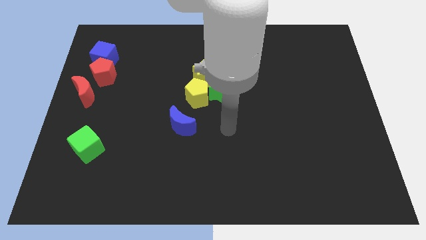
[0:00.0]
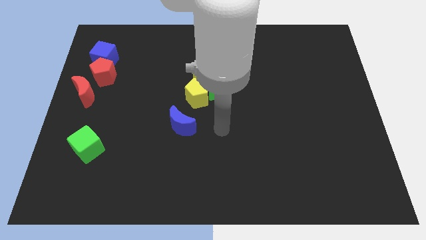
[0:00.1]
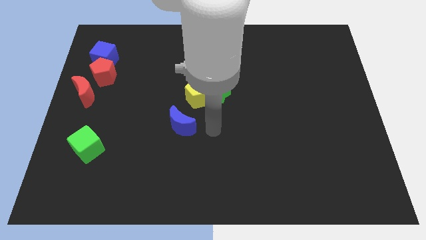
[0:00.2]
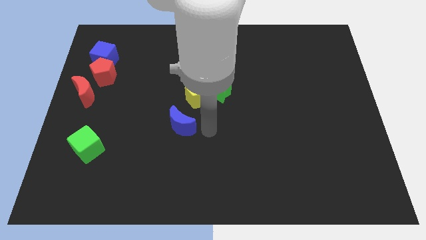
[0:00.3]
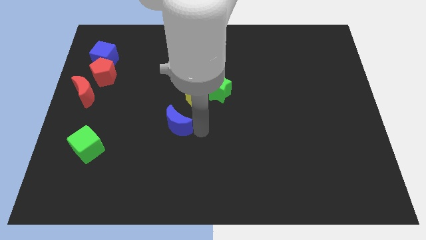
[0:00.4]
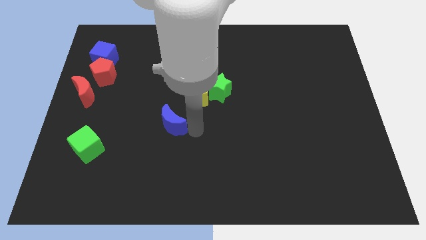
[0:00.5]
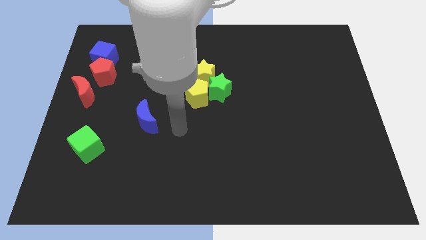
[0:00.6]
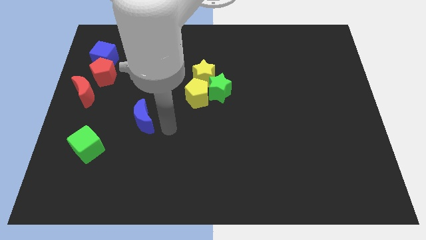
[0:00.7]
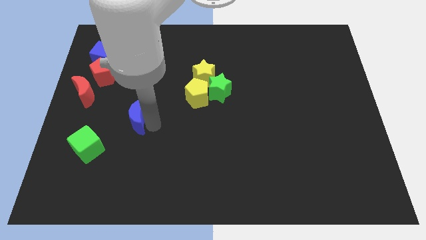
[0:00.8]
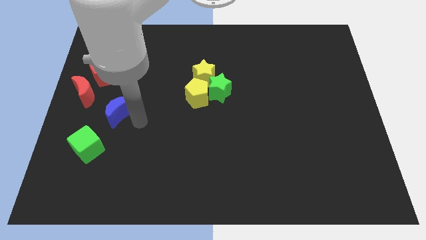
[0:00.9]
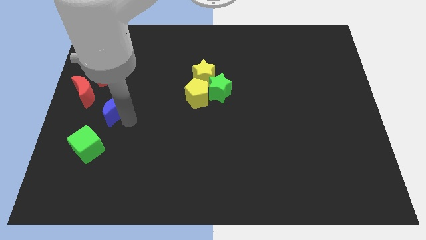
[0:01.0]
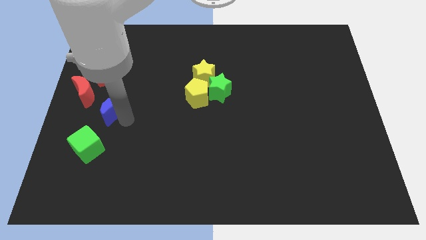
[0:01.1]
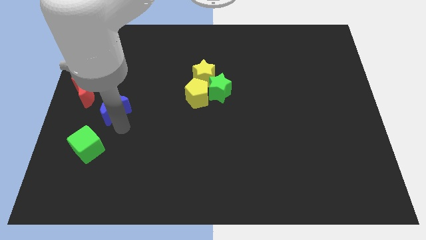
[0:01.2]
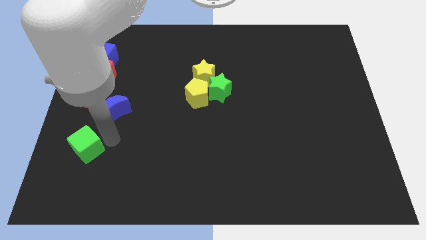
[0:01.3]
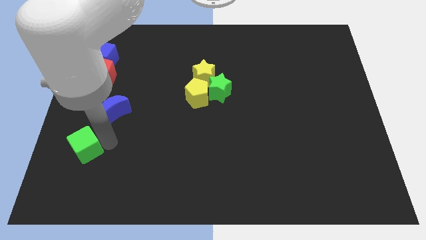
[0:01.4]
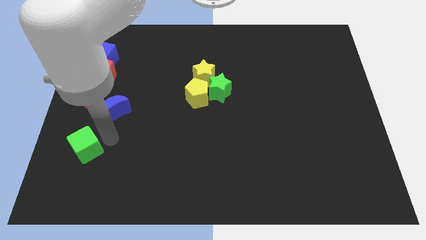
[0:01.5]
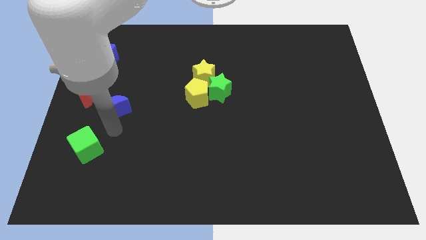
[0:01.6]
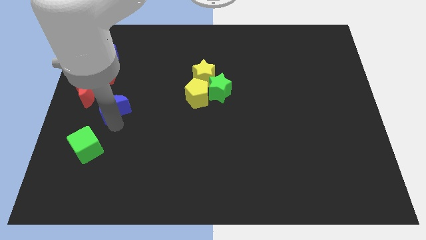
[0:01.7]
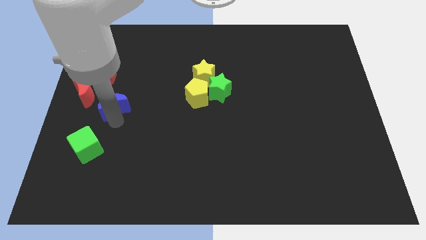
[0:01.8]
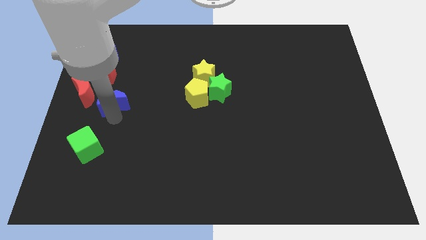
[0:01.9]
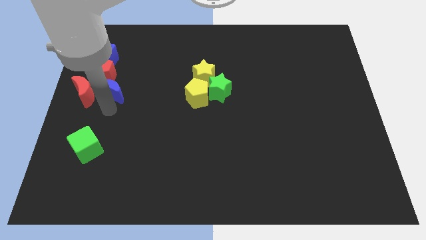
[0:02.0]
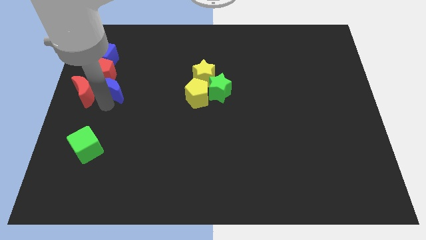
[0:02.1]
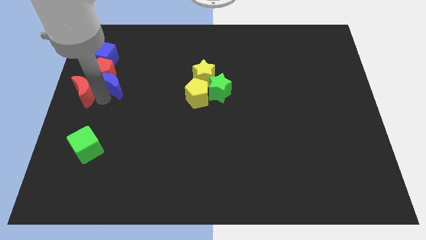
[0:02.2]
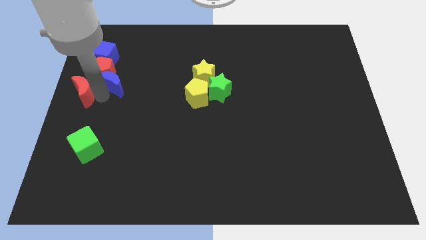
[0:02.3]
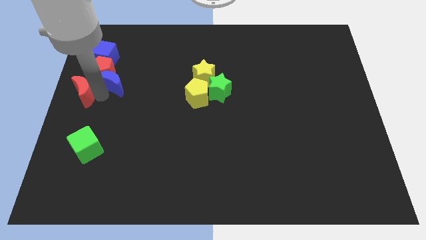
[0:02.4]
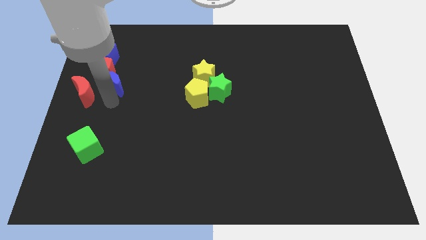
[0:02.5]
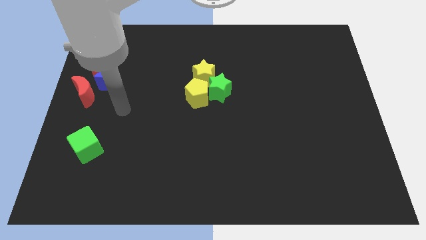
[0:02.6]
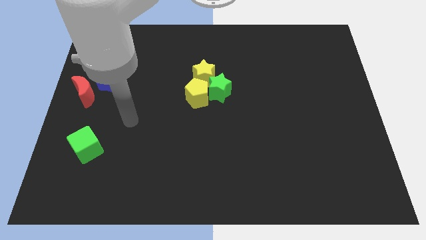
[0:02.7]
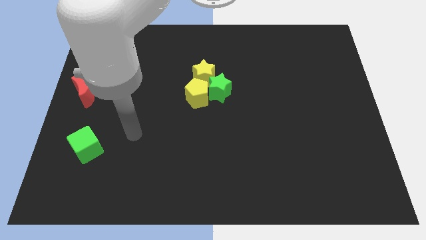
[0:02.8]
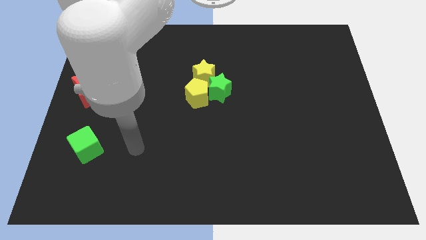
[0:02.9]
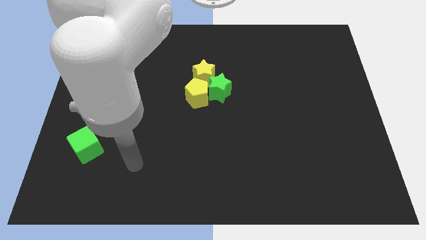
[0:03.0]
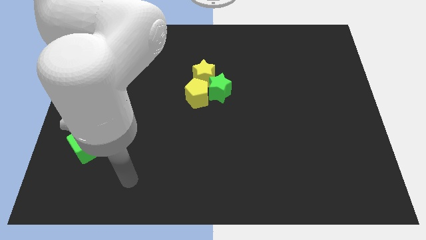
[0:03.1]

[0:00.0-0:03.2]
add the blue crescent to the group of both the red blocks and blue cube

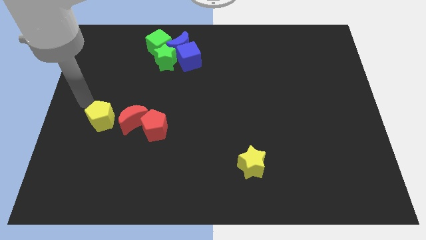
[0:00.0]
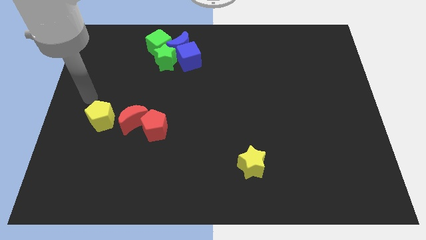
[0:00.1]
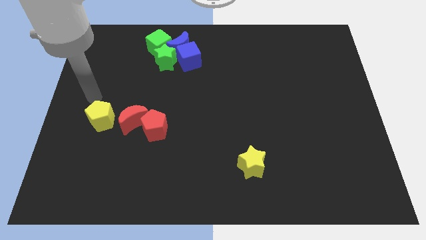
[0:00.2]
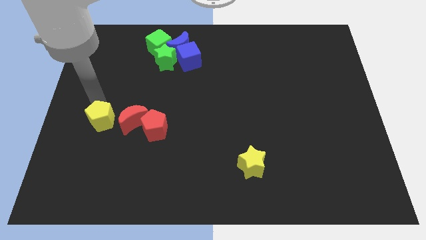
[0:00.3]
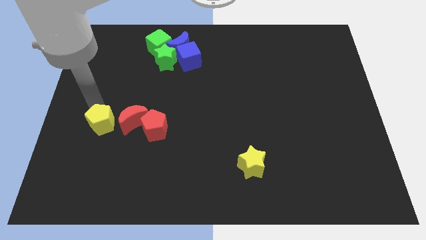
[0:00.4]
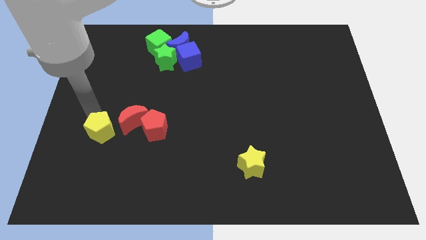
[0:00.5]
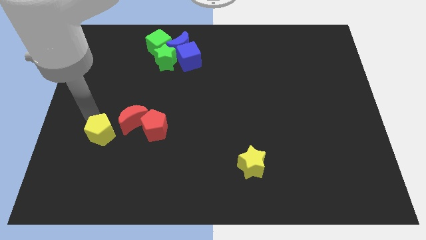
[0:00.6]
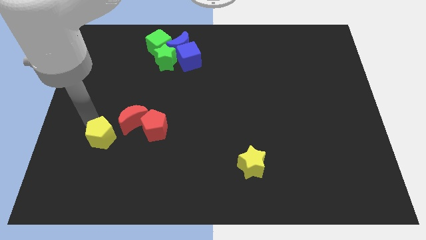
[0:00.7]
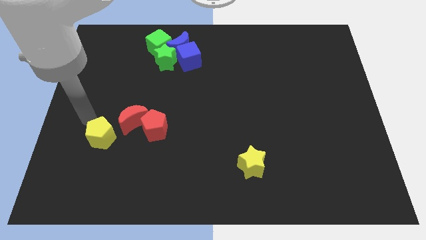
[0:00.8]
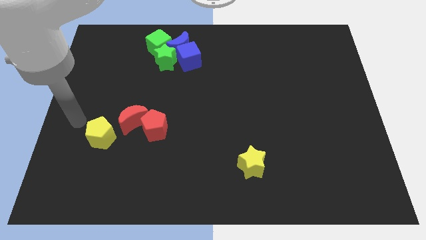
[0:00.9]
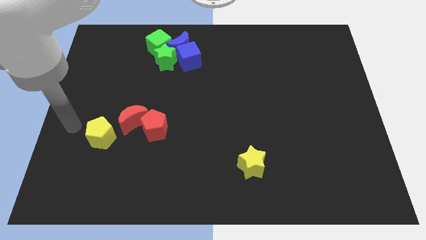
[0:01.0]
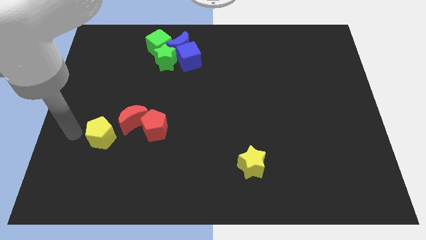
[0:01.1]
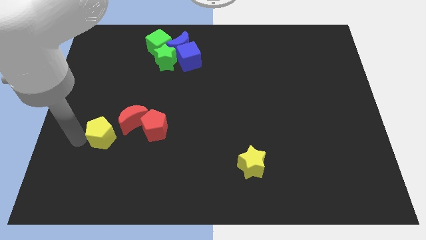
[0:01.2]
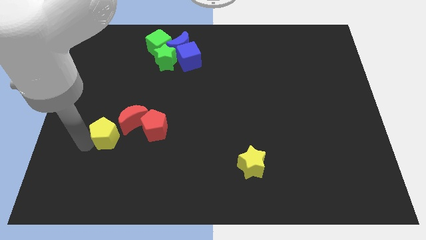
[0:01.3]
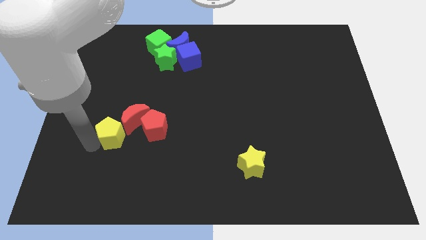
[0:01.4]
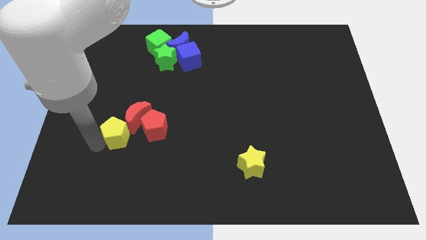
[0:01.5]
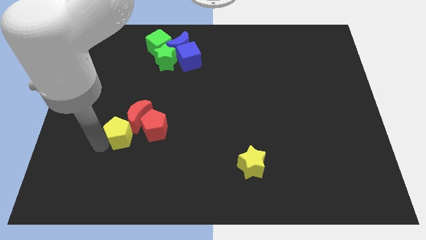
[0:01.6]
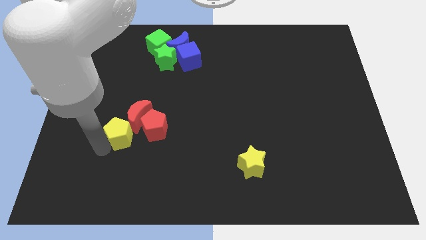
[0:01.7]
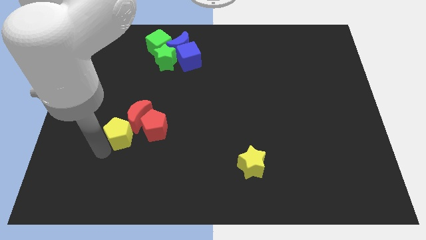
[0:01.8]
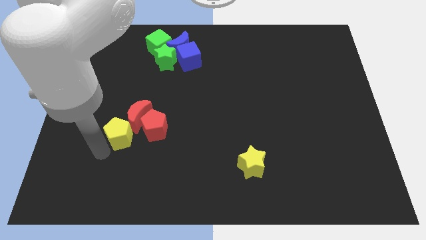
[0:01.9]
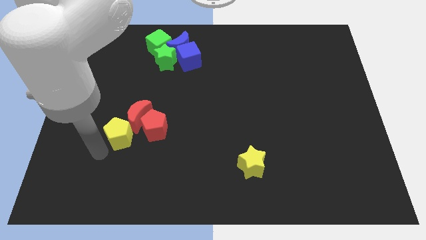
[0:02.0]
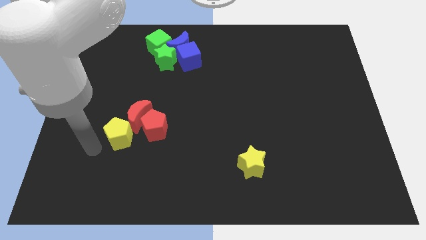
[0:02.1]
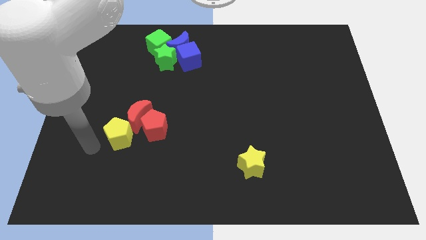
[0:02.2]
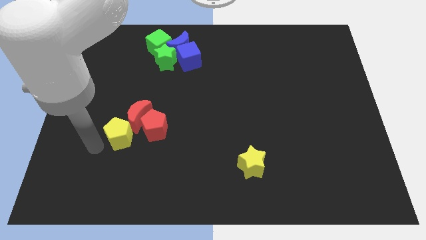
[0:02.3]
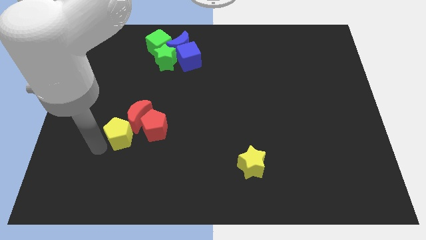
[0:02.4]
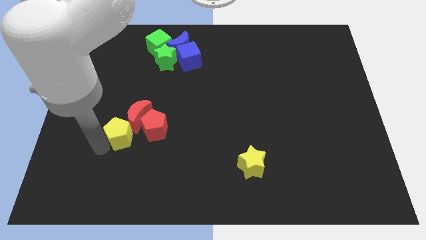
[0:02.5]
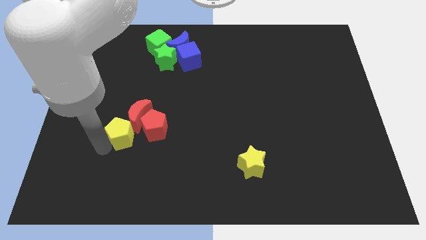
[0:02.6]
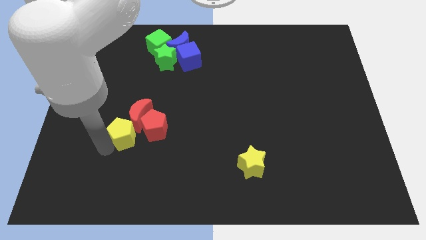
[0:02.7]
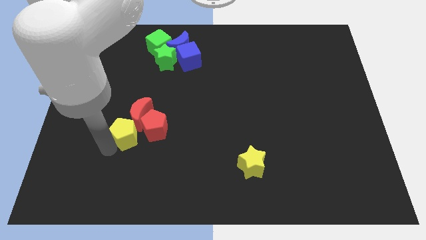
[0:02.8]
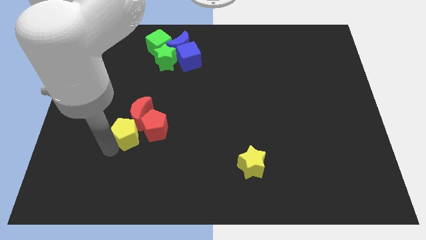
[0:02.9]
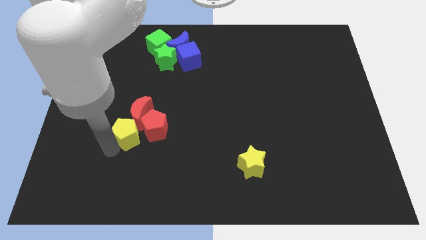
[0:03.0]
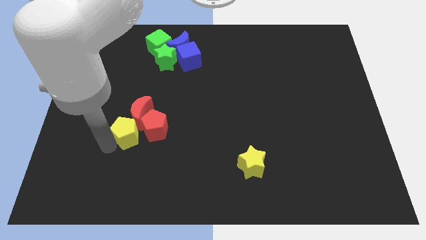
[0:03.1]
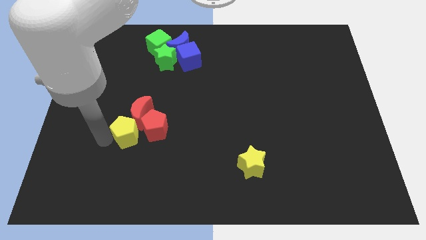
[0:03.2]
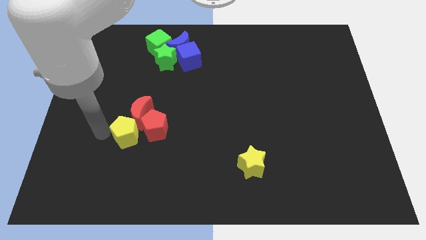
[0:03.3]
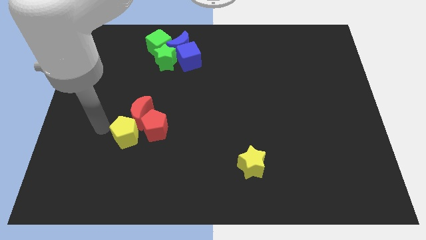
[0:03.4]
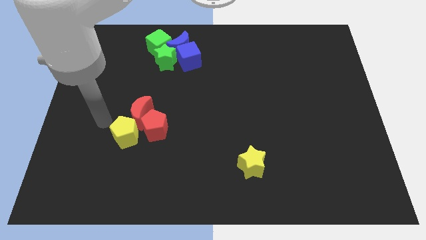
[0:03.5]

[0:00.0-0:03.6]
push the yellow pentagon towards the left of red pentagon

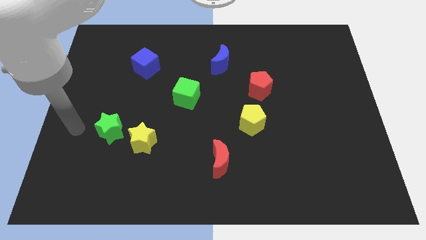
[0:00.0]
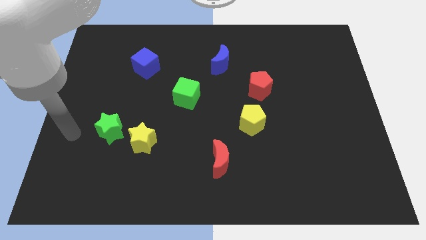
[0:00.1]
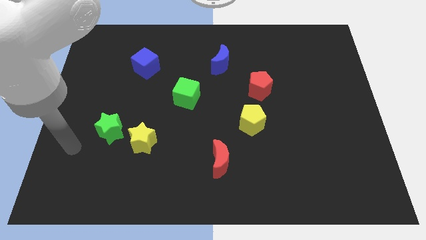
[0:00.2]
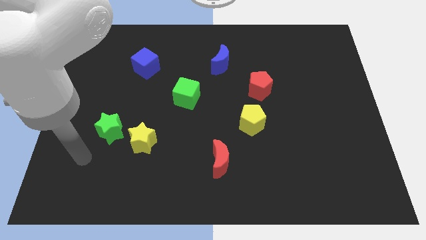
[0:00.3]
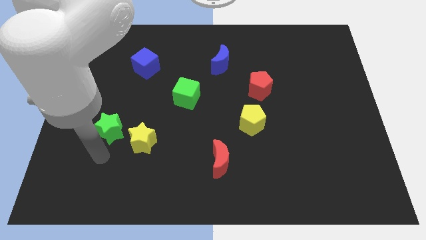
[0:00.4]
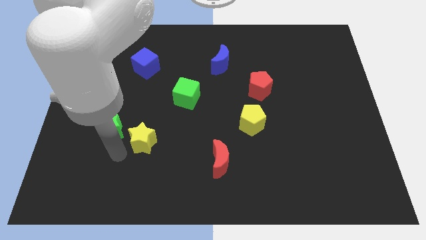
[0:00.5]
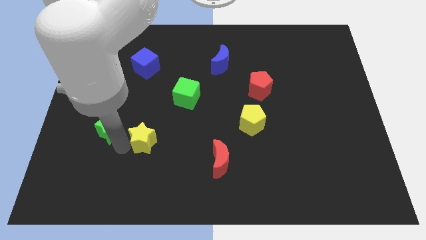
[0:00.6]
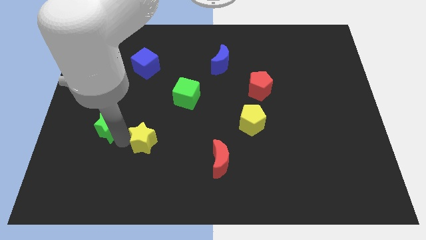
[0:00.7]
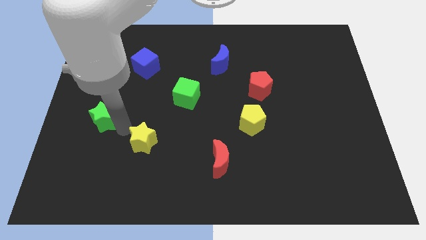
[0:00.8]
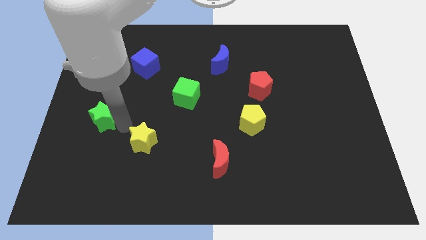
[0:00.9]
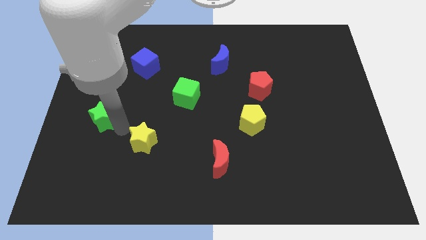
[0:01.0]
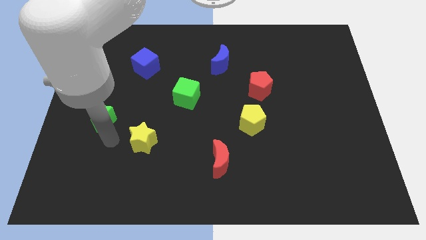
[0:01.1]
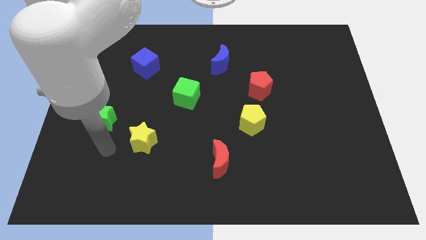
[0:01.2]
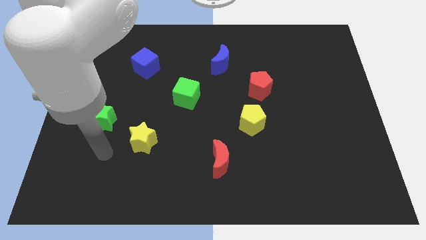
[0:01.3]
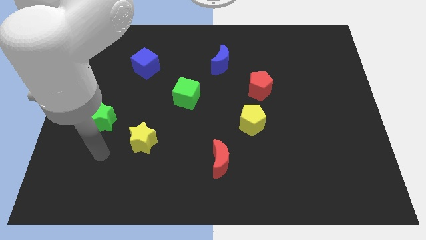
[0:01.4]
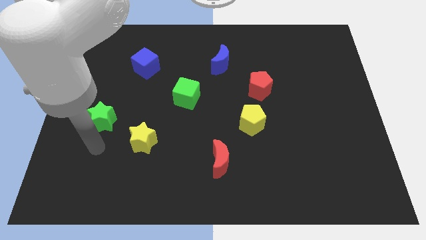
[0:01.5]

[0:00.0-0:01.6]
move green star slightly up

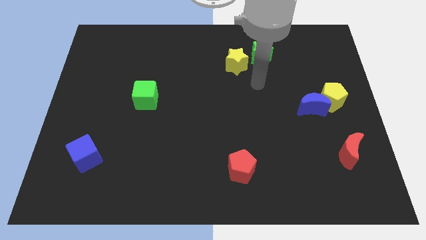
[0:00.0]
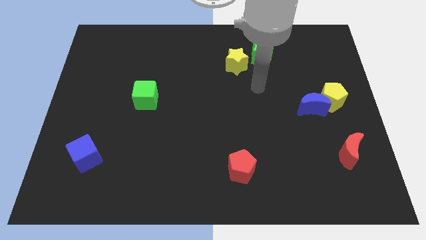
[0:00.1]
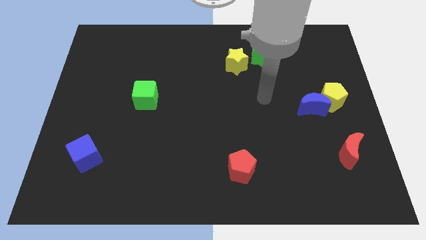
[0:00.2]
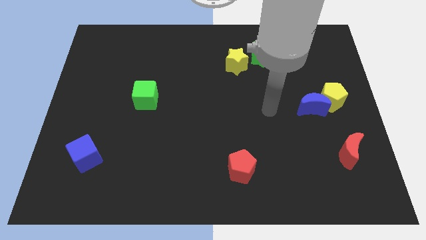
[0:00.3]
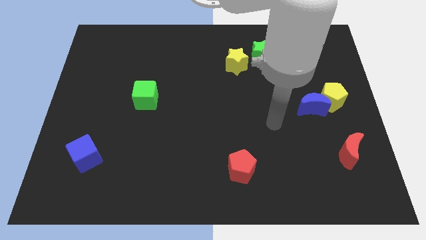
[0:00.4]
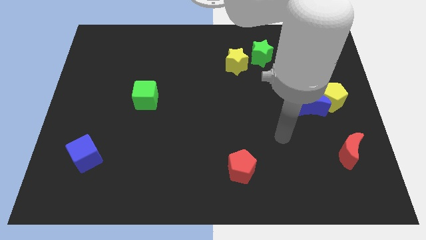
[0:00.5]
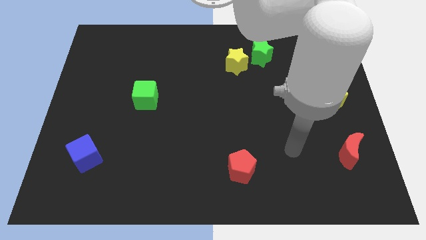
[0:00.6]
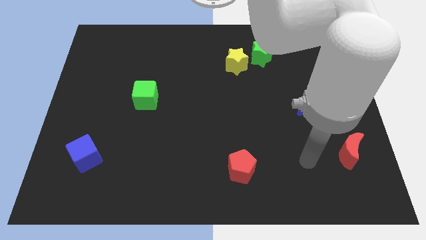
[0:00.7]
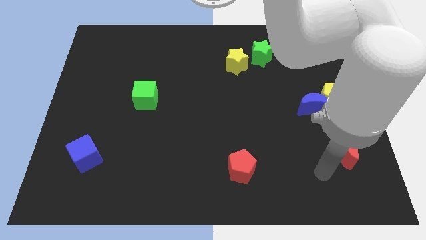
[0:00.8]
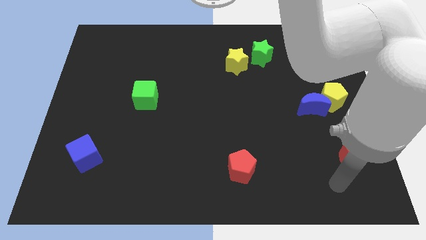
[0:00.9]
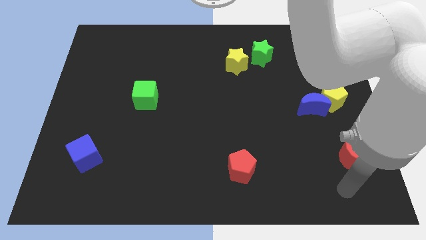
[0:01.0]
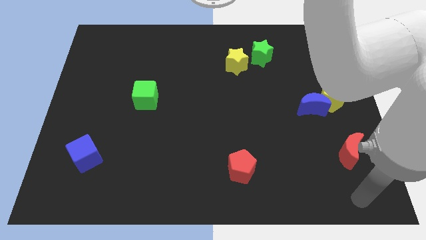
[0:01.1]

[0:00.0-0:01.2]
move your arm towards the bottom left of the red crescent
